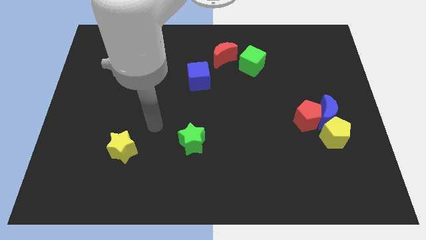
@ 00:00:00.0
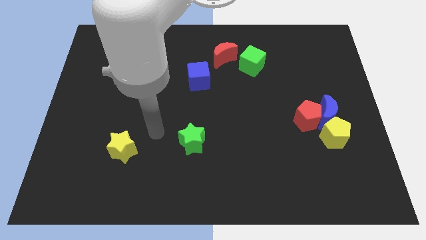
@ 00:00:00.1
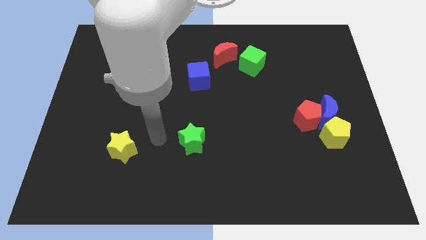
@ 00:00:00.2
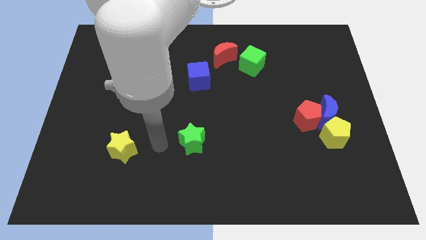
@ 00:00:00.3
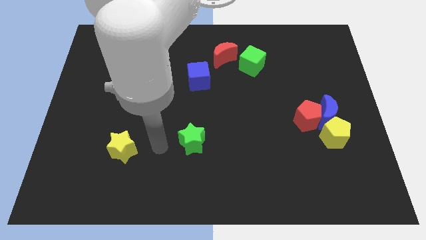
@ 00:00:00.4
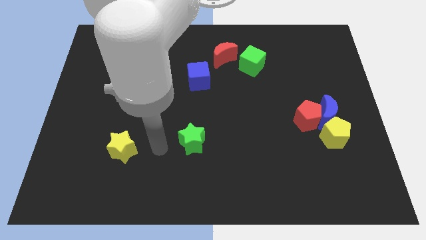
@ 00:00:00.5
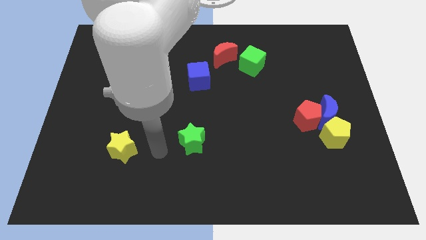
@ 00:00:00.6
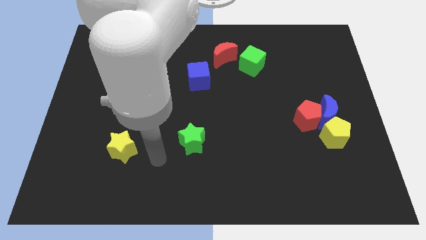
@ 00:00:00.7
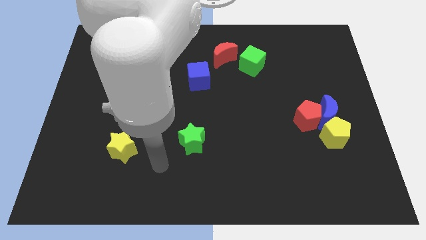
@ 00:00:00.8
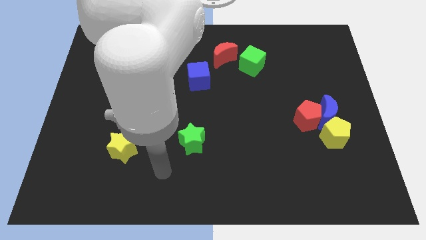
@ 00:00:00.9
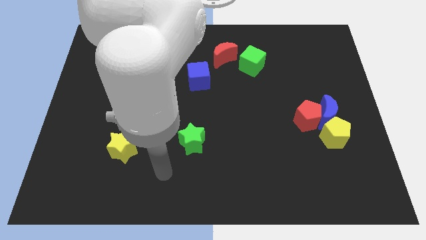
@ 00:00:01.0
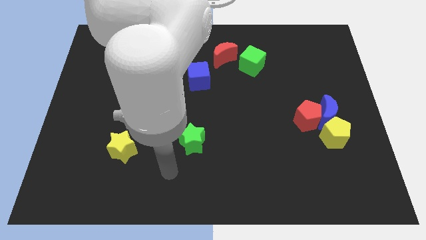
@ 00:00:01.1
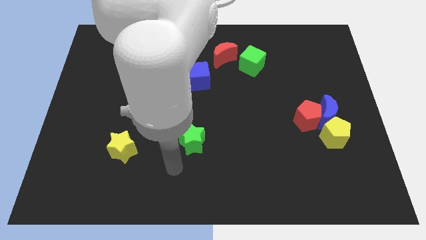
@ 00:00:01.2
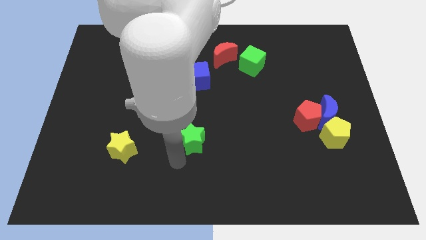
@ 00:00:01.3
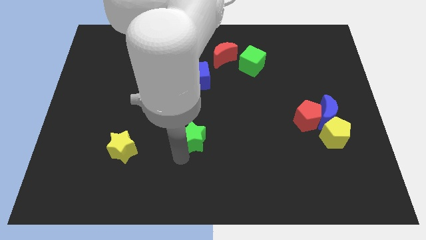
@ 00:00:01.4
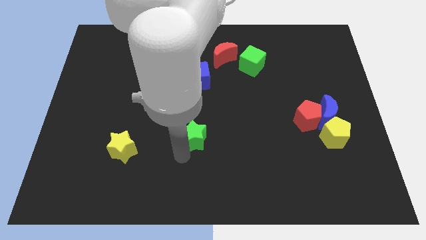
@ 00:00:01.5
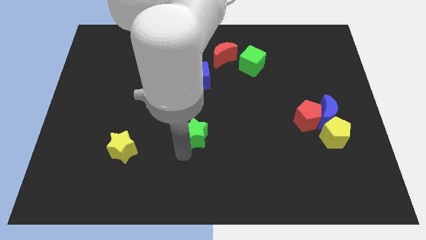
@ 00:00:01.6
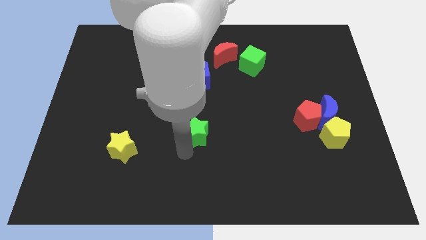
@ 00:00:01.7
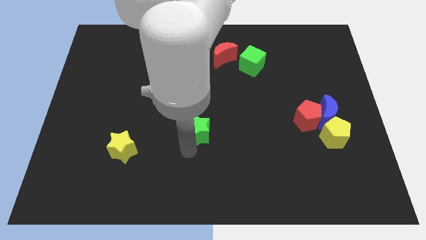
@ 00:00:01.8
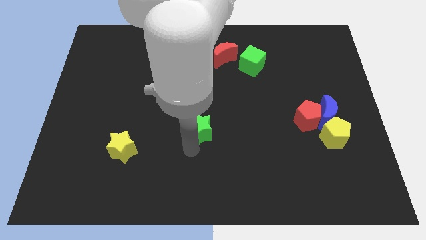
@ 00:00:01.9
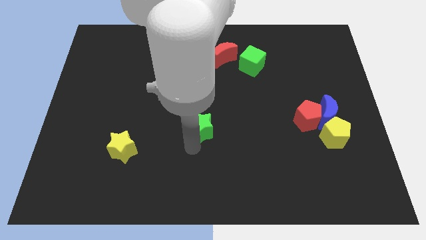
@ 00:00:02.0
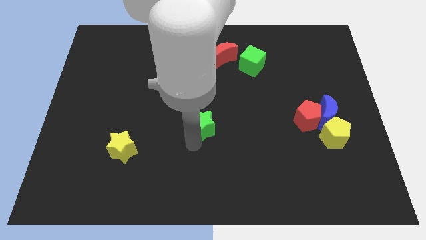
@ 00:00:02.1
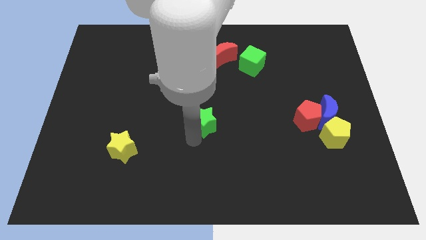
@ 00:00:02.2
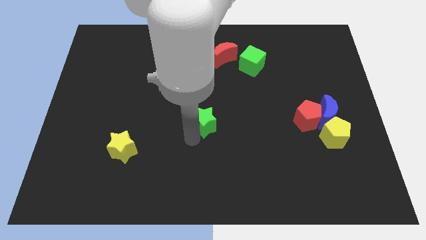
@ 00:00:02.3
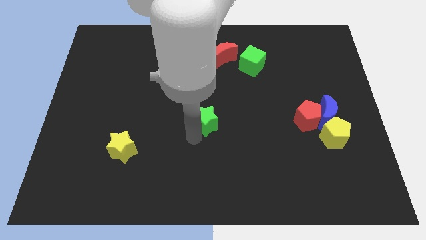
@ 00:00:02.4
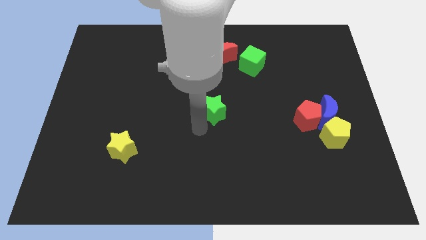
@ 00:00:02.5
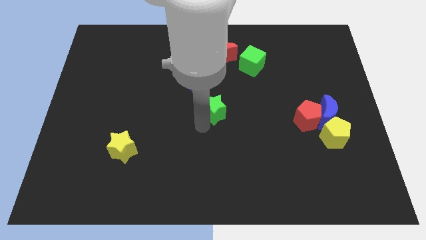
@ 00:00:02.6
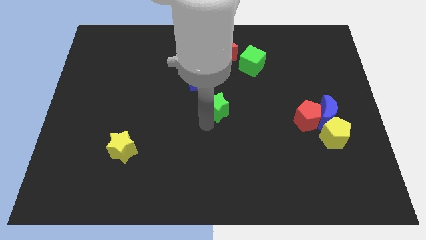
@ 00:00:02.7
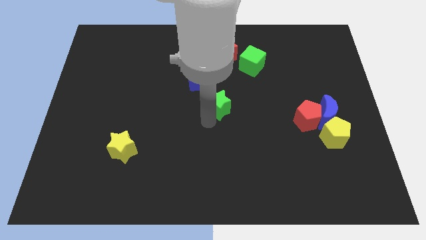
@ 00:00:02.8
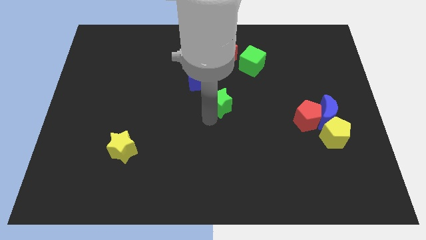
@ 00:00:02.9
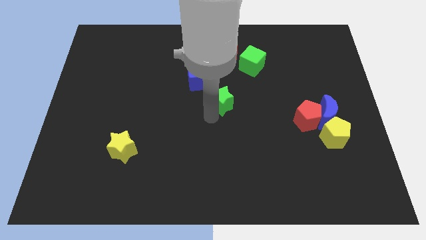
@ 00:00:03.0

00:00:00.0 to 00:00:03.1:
slide the green star towards green cube

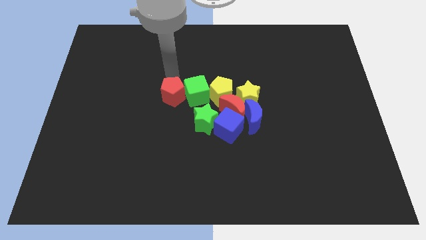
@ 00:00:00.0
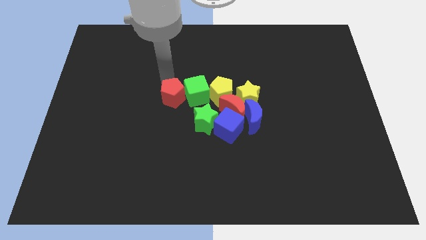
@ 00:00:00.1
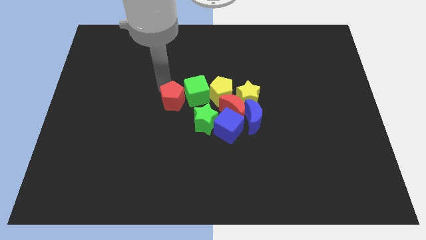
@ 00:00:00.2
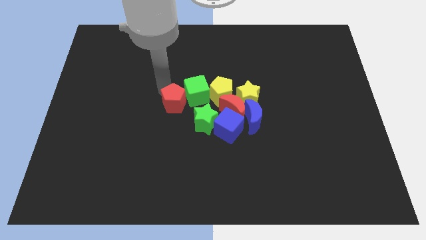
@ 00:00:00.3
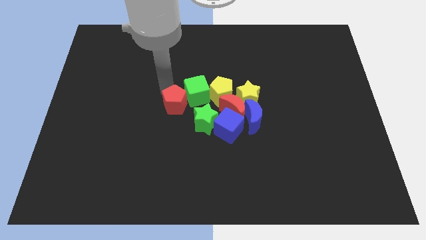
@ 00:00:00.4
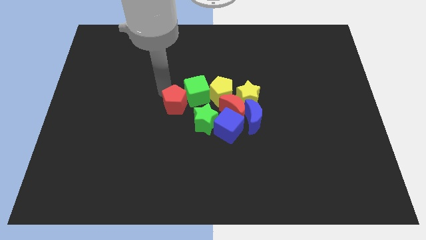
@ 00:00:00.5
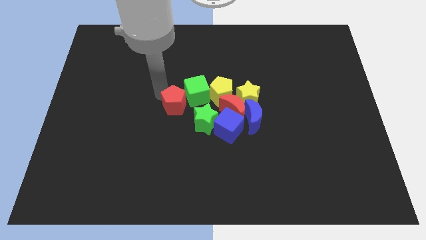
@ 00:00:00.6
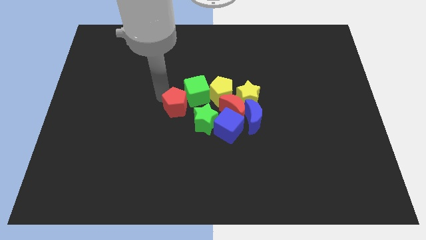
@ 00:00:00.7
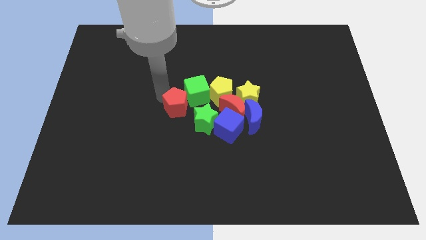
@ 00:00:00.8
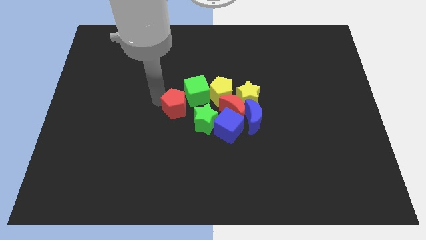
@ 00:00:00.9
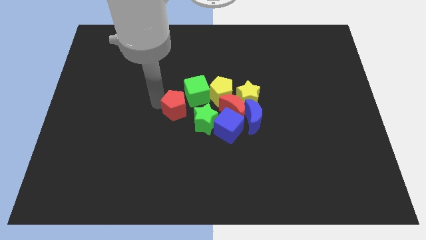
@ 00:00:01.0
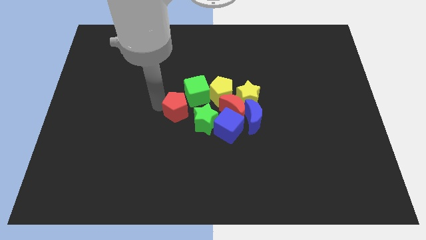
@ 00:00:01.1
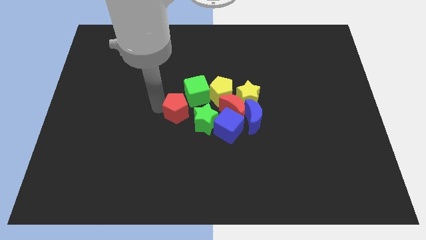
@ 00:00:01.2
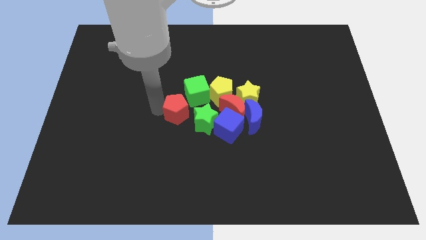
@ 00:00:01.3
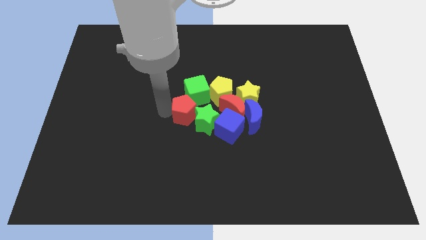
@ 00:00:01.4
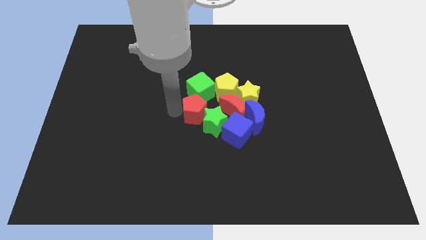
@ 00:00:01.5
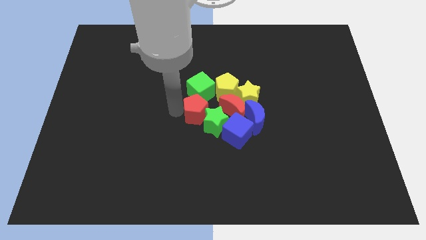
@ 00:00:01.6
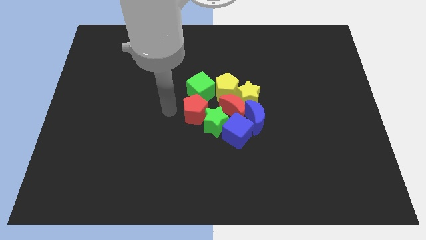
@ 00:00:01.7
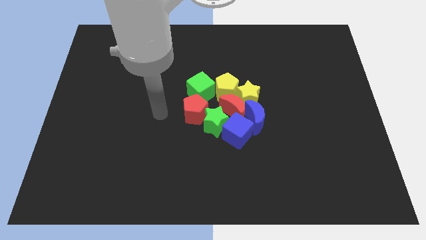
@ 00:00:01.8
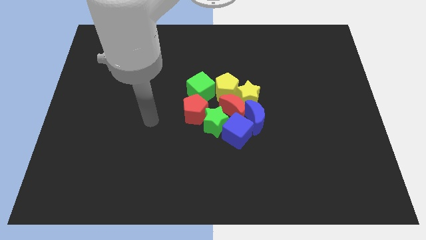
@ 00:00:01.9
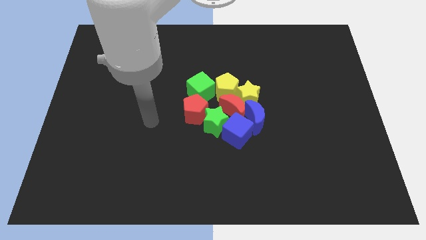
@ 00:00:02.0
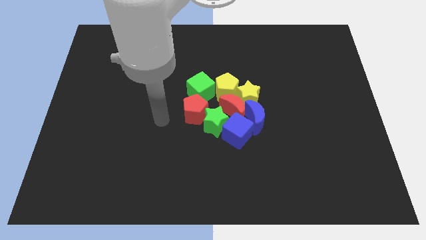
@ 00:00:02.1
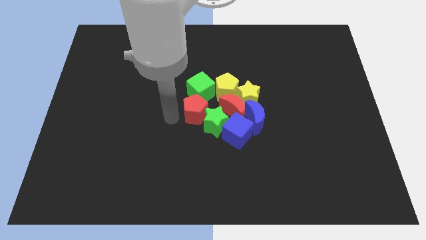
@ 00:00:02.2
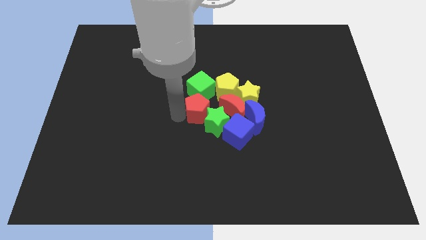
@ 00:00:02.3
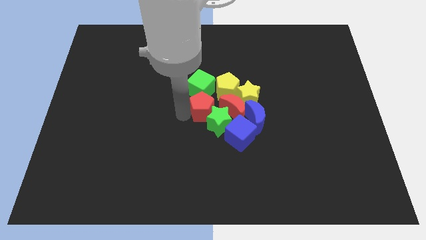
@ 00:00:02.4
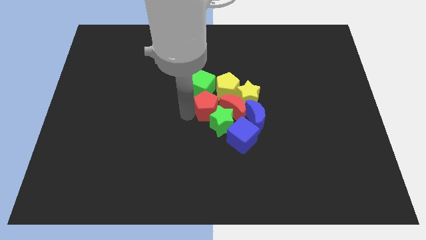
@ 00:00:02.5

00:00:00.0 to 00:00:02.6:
place the red pentagon down to the green cube

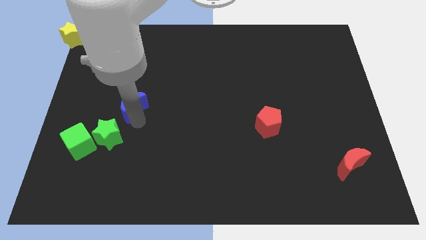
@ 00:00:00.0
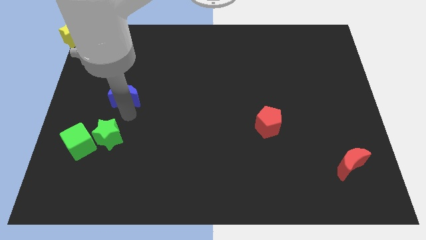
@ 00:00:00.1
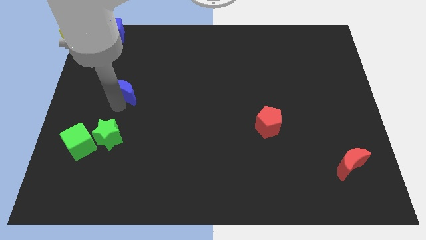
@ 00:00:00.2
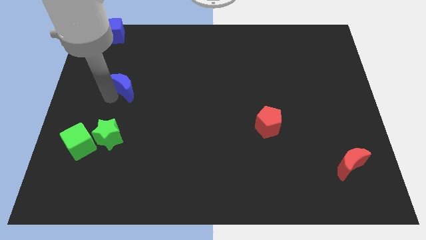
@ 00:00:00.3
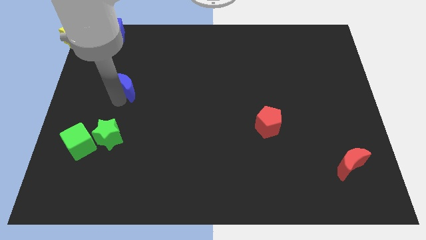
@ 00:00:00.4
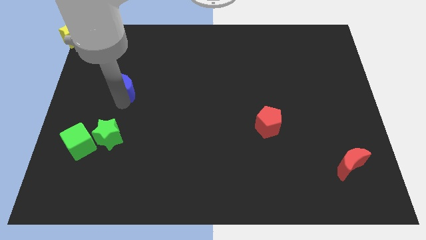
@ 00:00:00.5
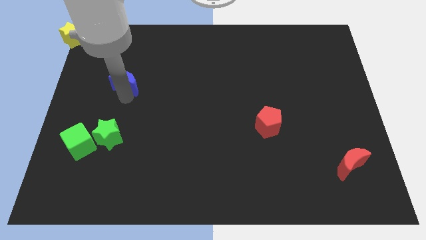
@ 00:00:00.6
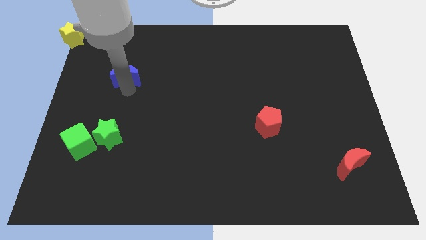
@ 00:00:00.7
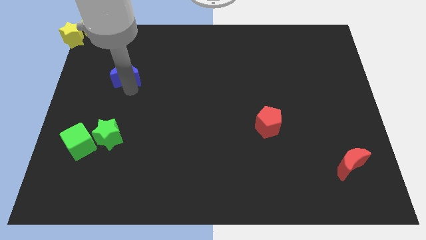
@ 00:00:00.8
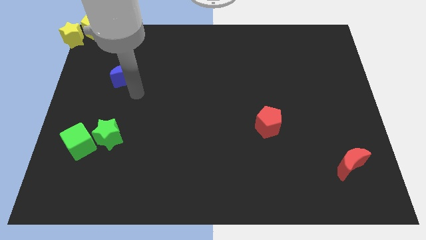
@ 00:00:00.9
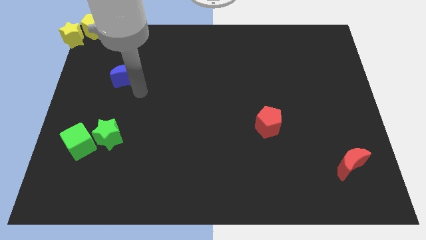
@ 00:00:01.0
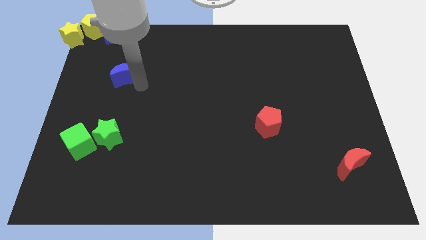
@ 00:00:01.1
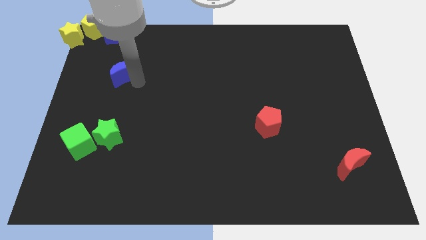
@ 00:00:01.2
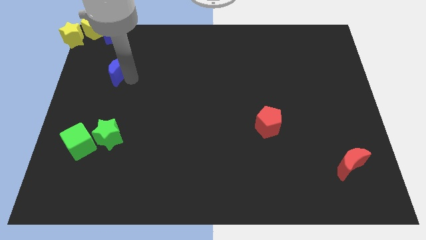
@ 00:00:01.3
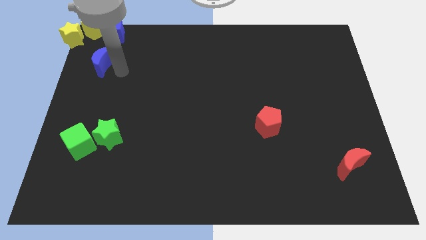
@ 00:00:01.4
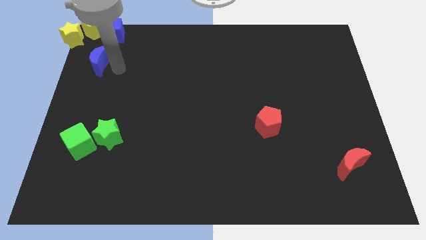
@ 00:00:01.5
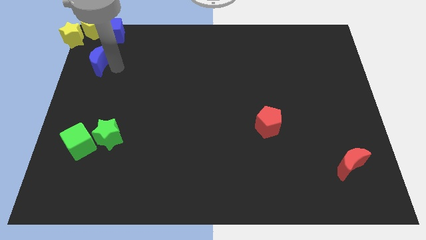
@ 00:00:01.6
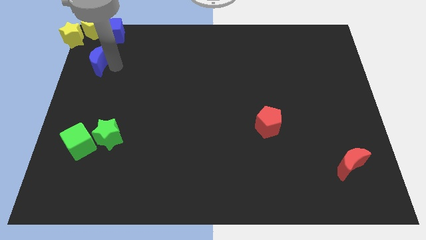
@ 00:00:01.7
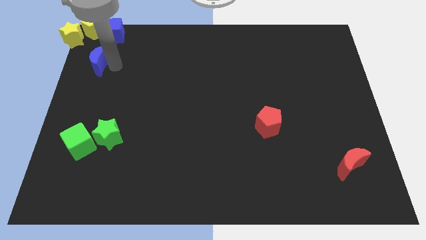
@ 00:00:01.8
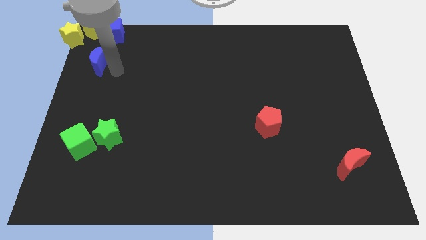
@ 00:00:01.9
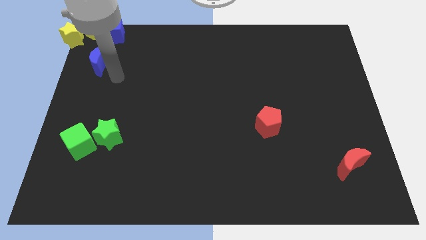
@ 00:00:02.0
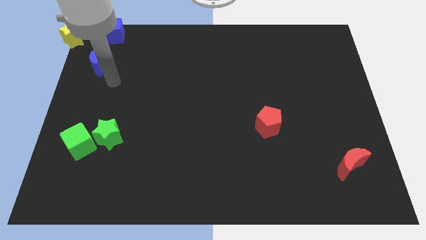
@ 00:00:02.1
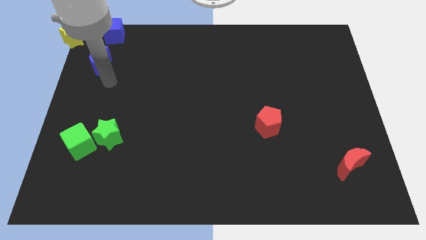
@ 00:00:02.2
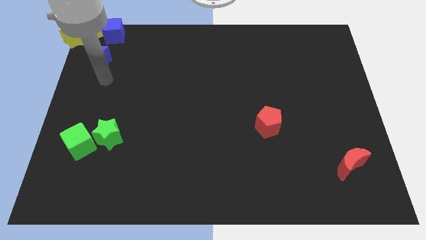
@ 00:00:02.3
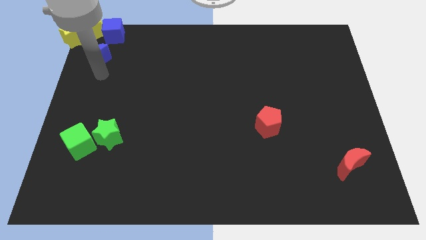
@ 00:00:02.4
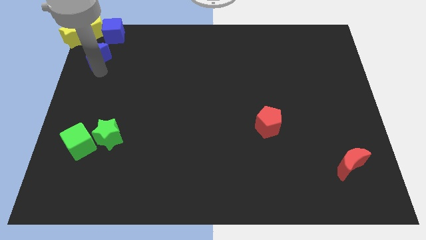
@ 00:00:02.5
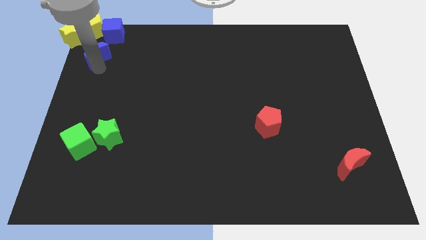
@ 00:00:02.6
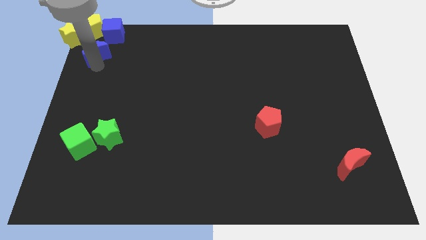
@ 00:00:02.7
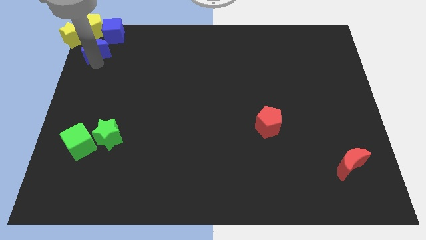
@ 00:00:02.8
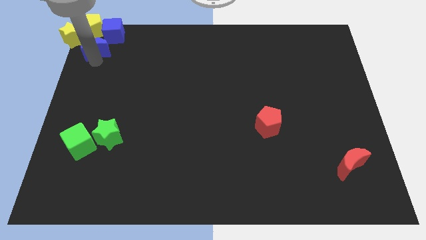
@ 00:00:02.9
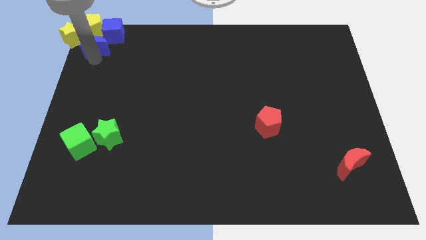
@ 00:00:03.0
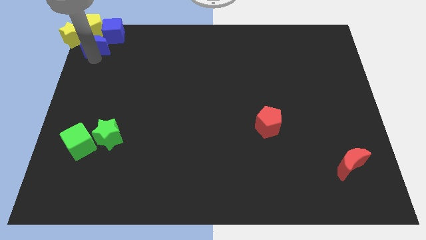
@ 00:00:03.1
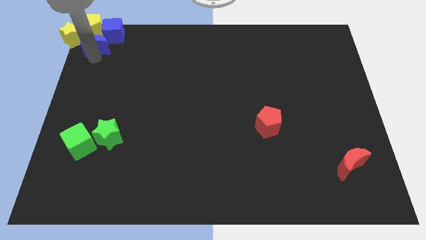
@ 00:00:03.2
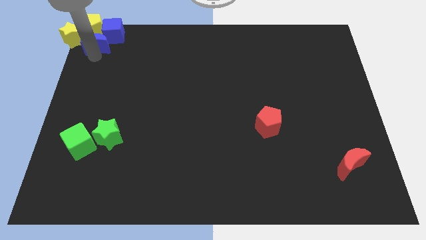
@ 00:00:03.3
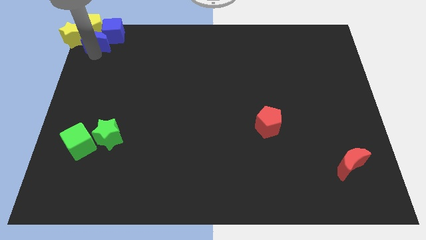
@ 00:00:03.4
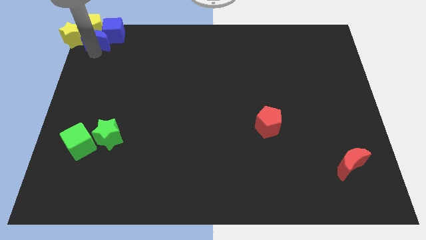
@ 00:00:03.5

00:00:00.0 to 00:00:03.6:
move the blue crescent into the group of blocks
